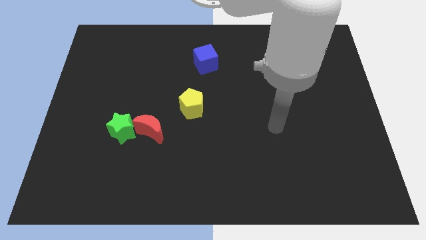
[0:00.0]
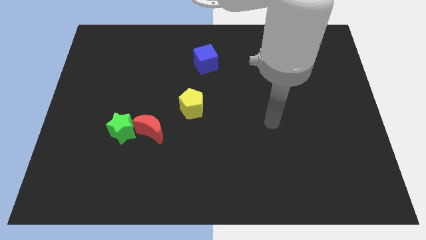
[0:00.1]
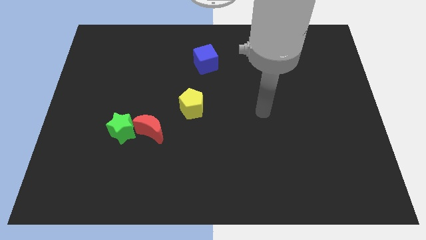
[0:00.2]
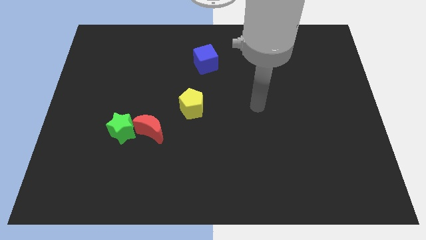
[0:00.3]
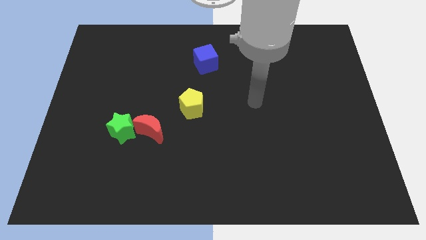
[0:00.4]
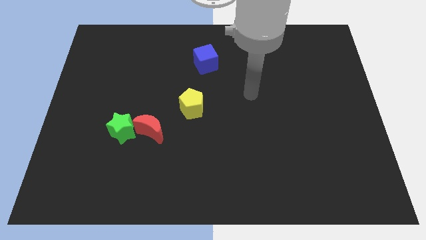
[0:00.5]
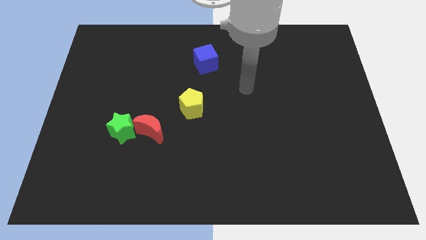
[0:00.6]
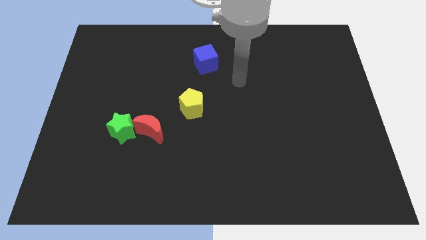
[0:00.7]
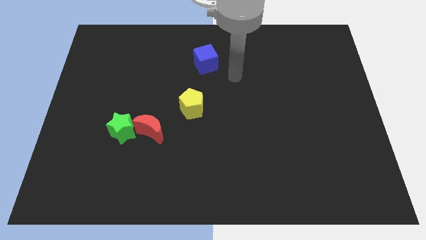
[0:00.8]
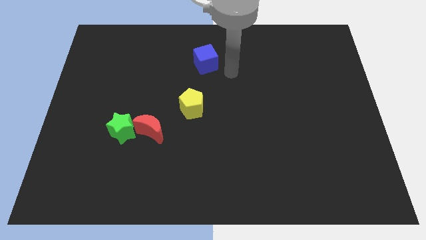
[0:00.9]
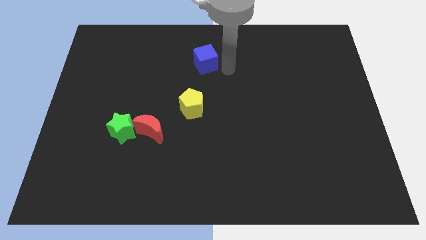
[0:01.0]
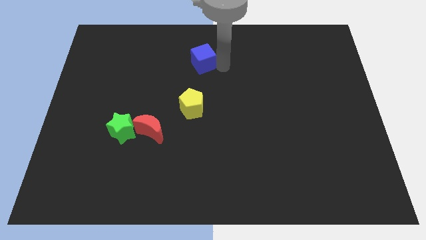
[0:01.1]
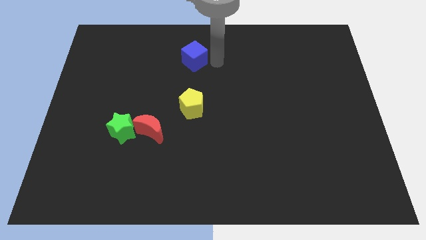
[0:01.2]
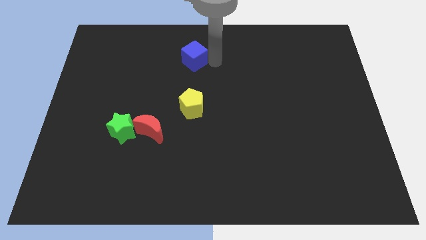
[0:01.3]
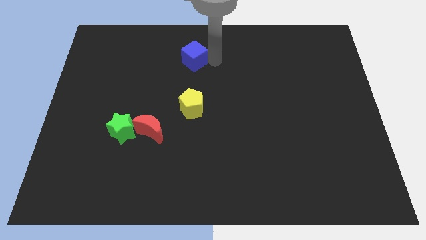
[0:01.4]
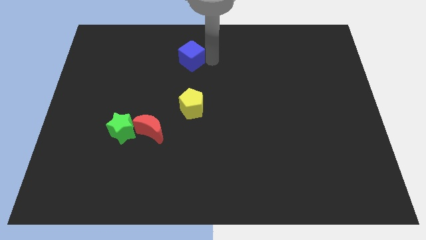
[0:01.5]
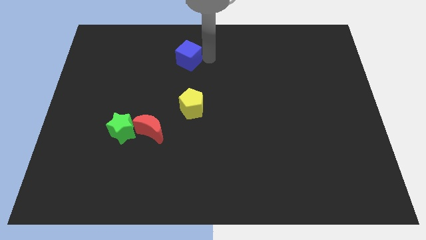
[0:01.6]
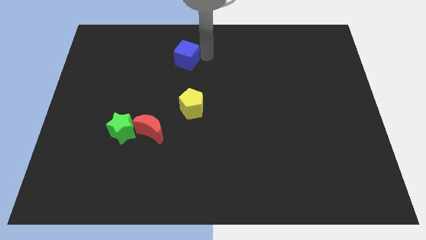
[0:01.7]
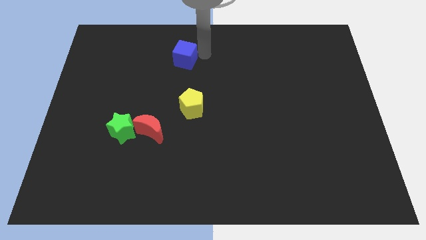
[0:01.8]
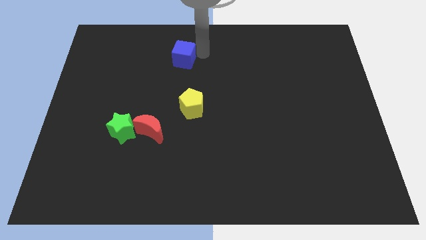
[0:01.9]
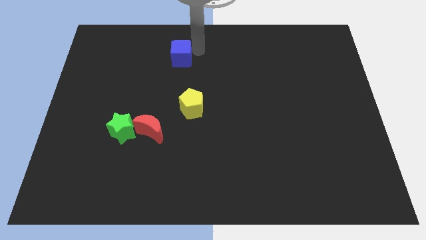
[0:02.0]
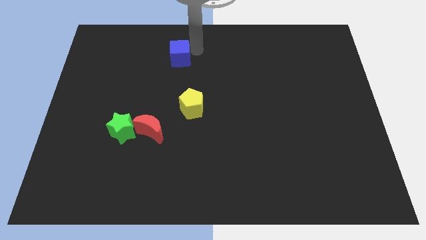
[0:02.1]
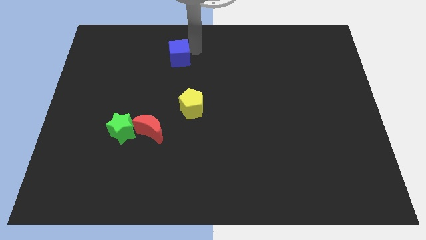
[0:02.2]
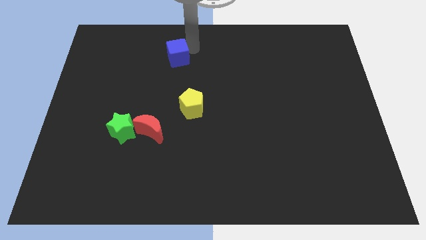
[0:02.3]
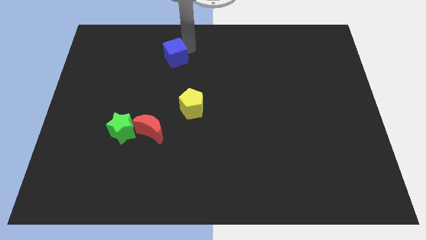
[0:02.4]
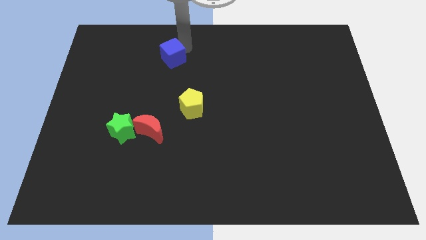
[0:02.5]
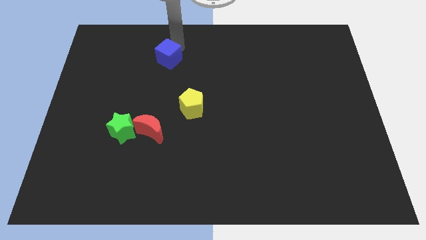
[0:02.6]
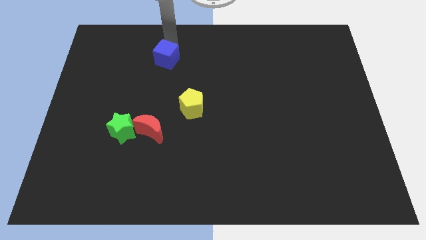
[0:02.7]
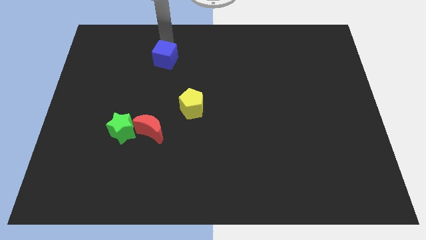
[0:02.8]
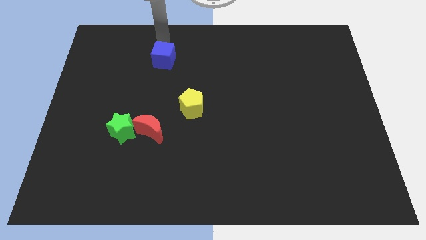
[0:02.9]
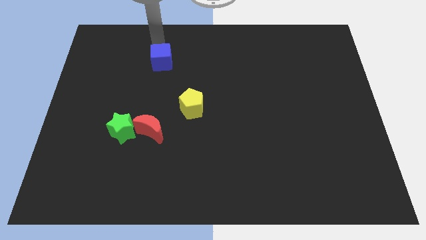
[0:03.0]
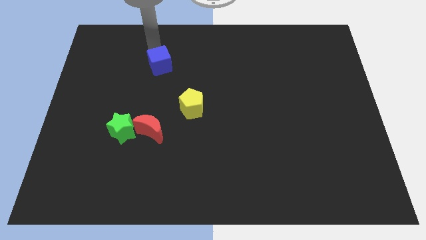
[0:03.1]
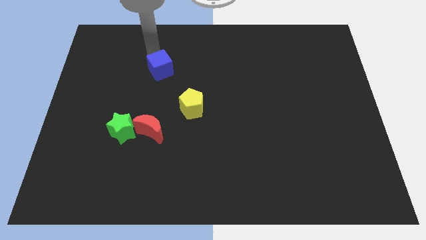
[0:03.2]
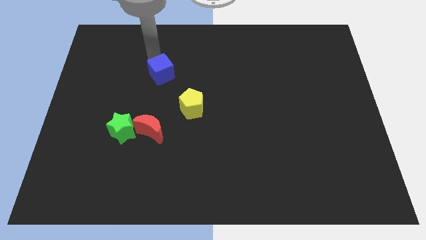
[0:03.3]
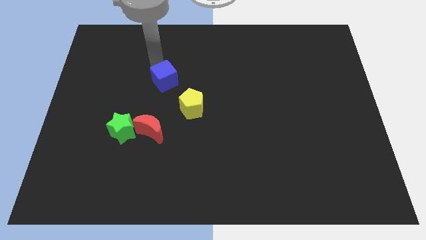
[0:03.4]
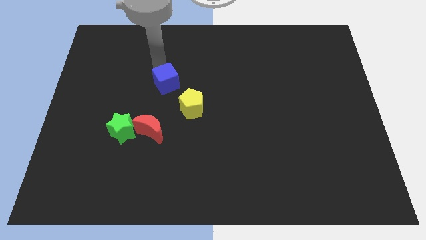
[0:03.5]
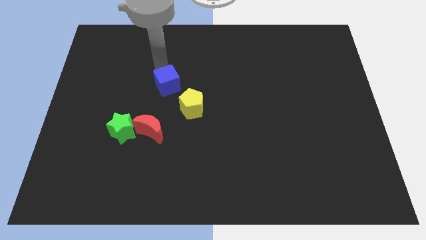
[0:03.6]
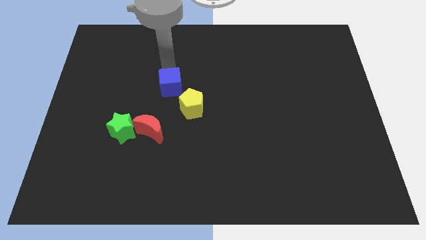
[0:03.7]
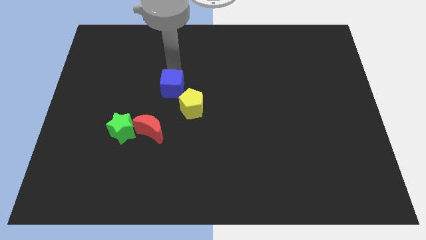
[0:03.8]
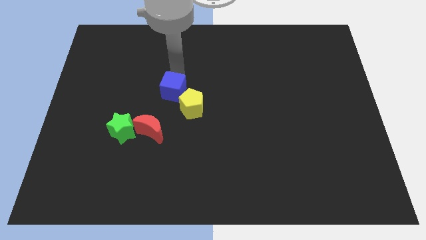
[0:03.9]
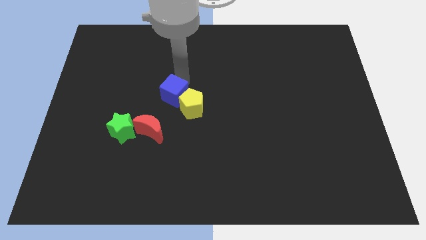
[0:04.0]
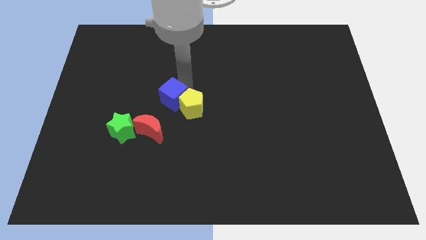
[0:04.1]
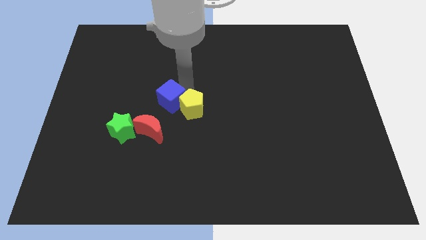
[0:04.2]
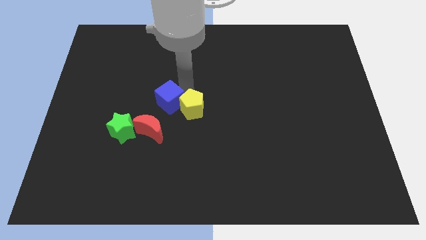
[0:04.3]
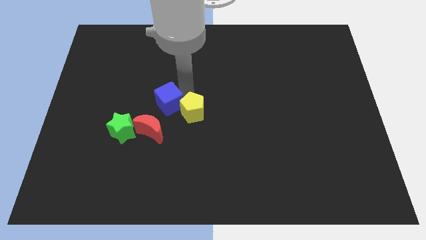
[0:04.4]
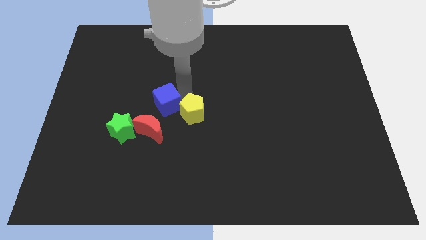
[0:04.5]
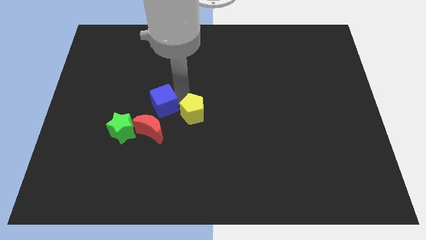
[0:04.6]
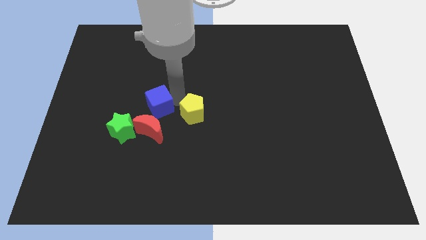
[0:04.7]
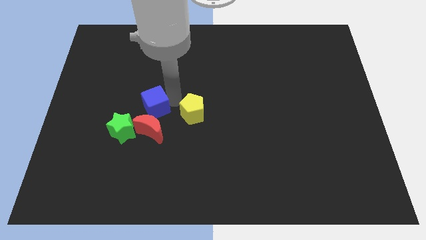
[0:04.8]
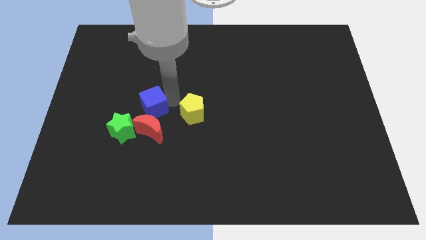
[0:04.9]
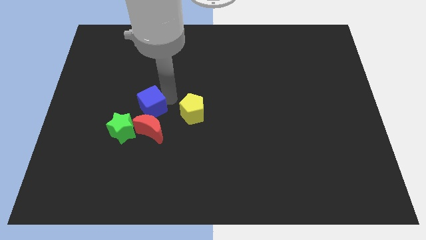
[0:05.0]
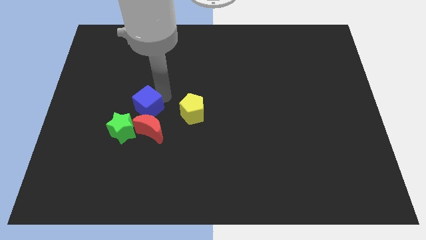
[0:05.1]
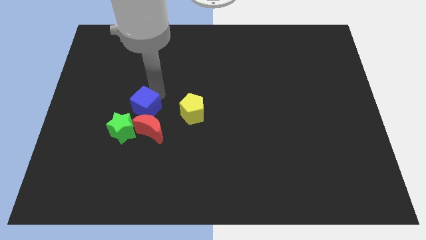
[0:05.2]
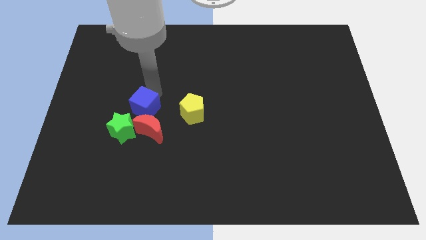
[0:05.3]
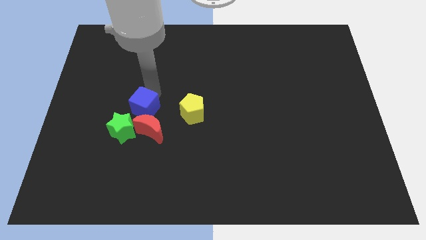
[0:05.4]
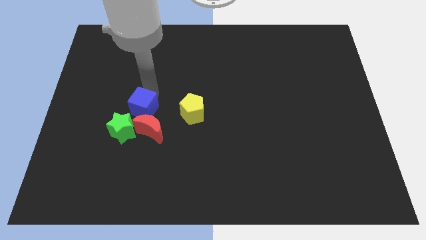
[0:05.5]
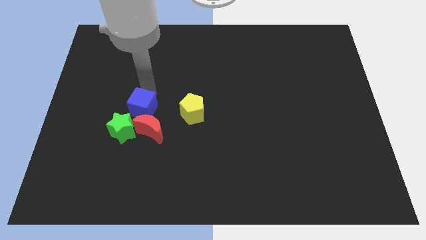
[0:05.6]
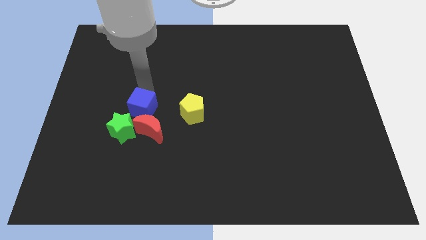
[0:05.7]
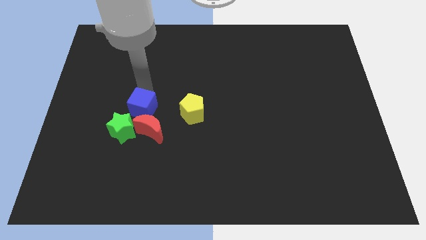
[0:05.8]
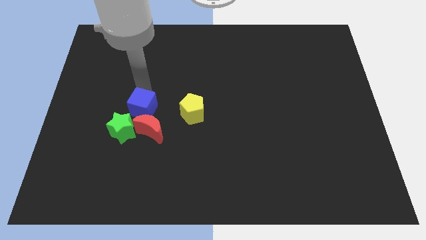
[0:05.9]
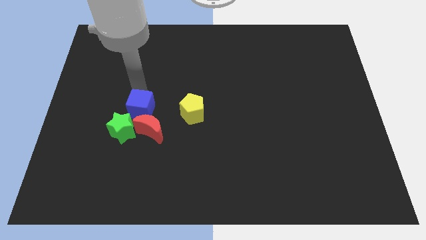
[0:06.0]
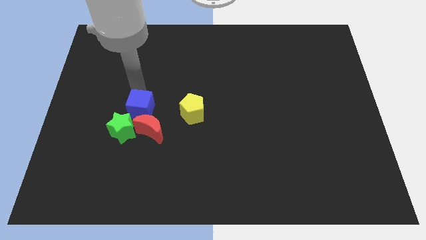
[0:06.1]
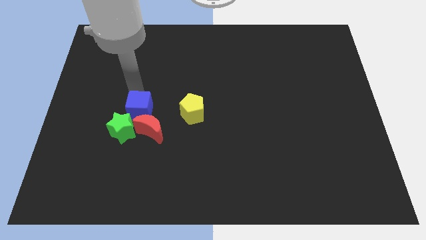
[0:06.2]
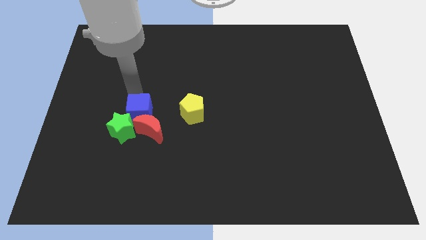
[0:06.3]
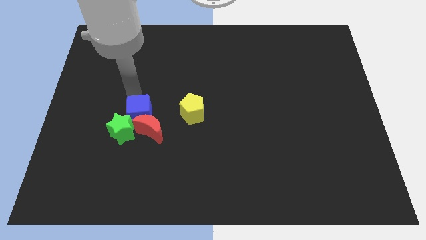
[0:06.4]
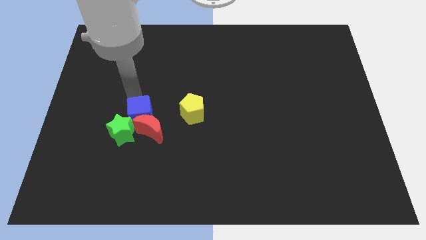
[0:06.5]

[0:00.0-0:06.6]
push the blue block to the red moon

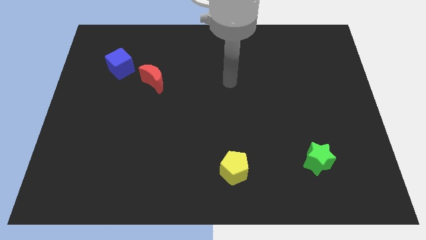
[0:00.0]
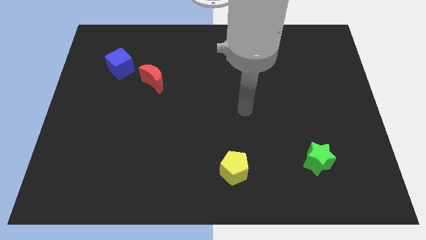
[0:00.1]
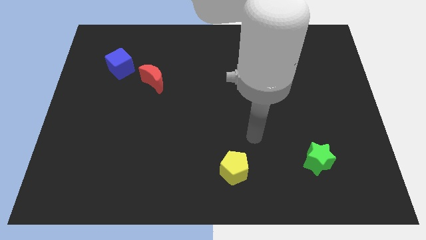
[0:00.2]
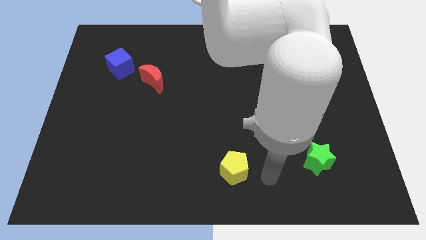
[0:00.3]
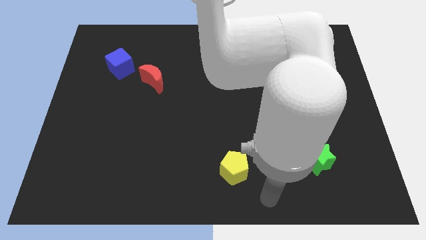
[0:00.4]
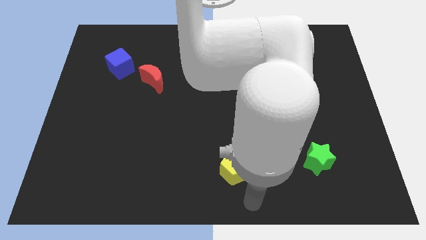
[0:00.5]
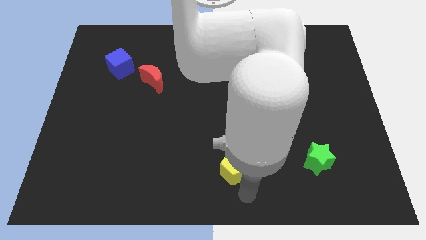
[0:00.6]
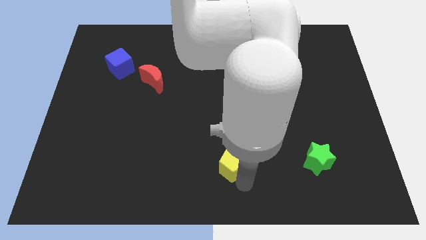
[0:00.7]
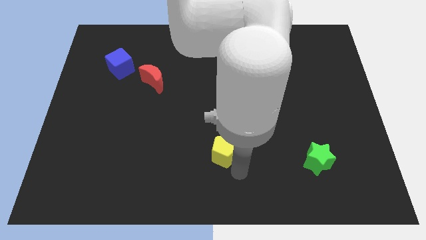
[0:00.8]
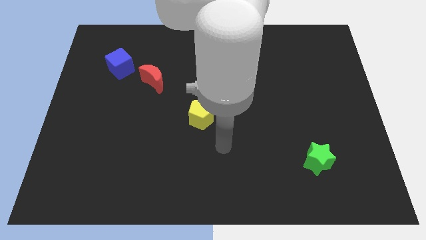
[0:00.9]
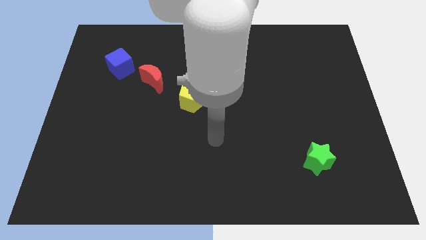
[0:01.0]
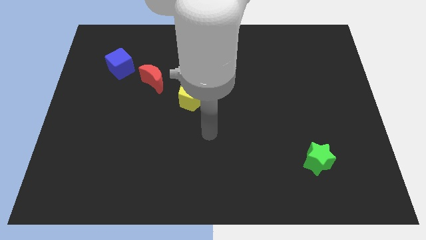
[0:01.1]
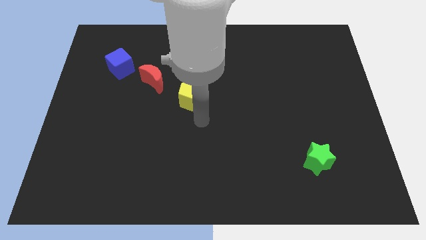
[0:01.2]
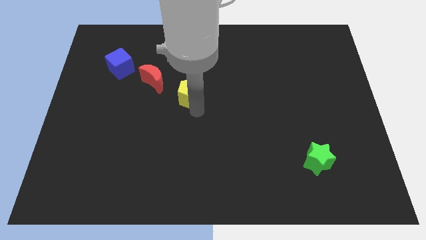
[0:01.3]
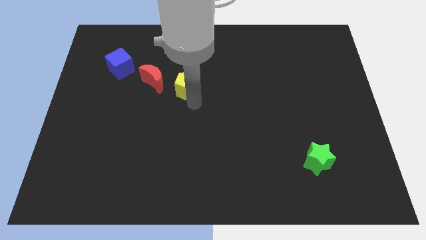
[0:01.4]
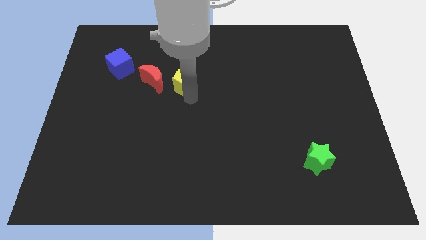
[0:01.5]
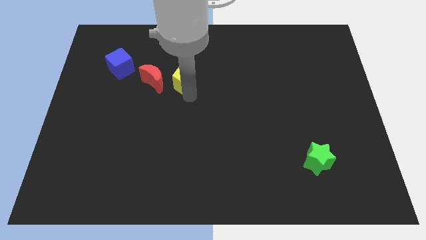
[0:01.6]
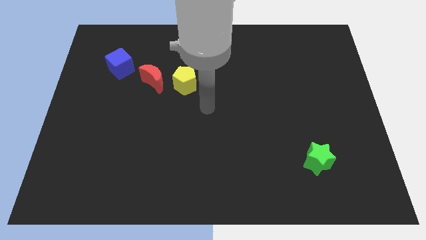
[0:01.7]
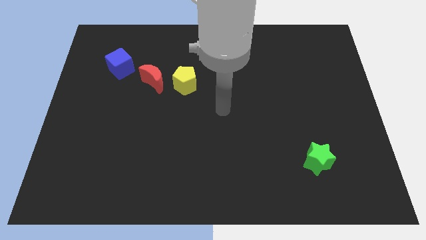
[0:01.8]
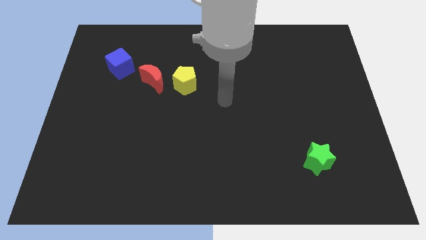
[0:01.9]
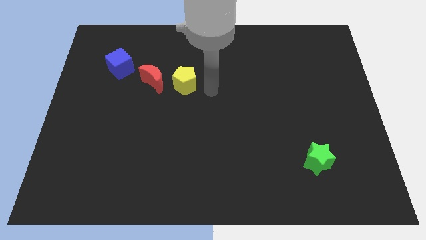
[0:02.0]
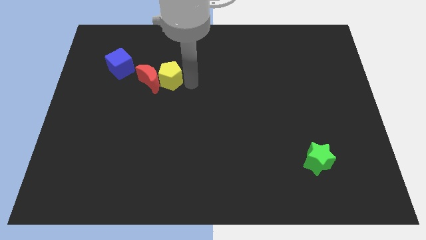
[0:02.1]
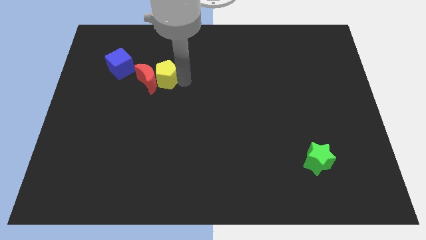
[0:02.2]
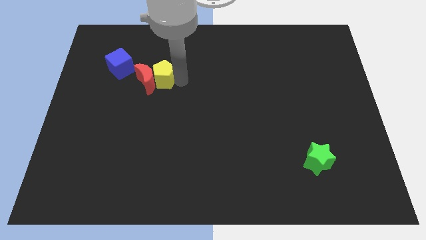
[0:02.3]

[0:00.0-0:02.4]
slide the yellow block towards the red moon
